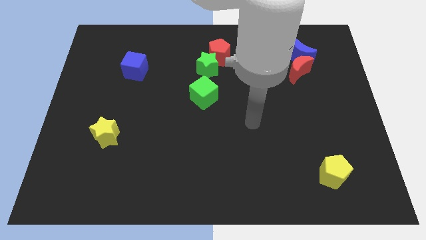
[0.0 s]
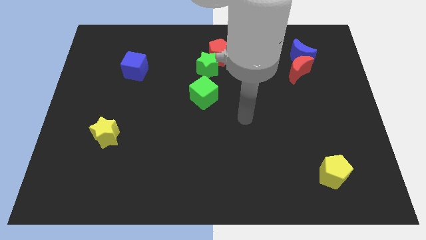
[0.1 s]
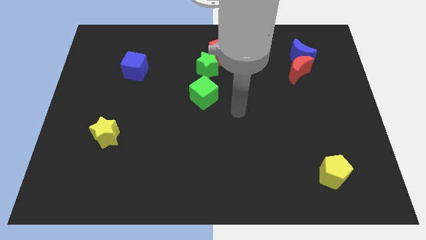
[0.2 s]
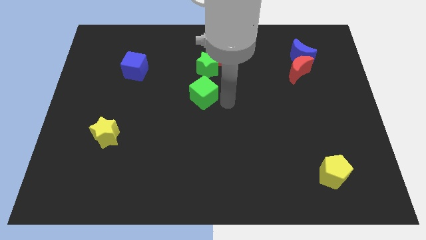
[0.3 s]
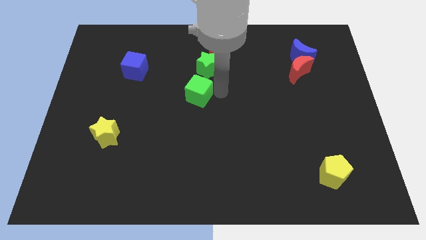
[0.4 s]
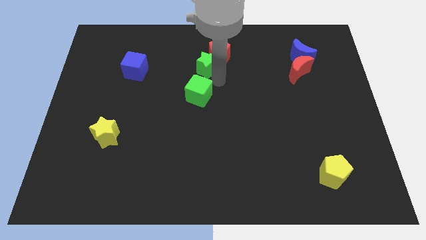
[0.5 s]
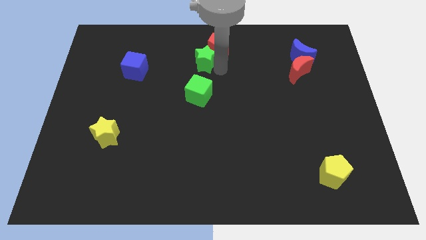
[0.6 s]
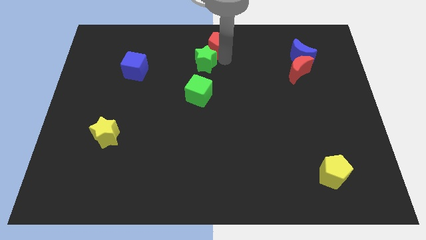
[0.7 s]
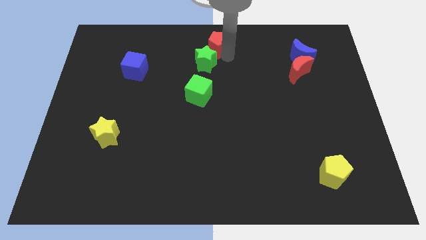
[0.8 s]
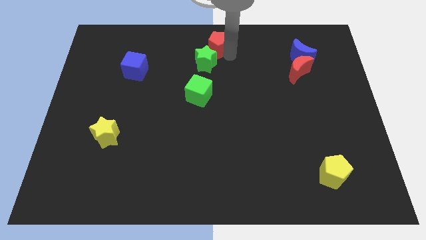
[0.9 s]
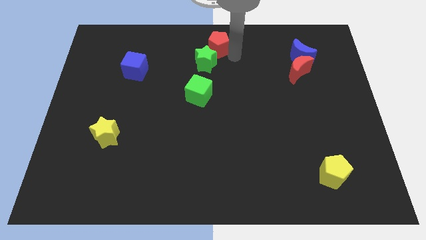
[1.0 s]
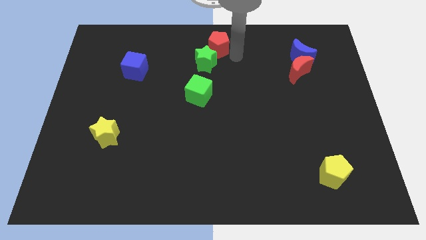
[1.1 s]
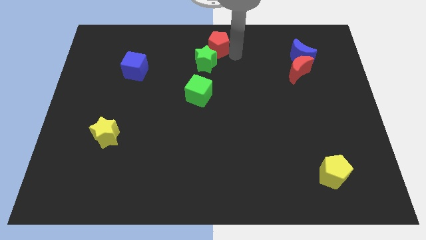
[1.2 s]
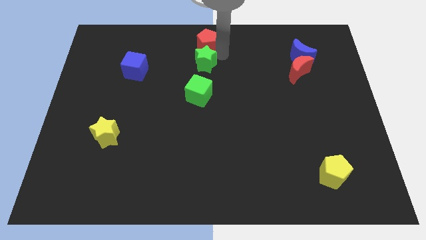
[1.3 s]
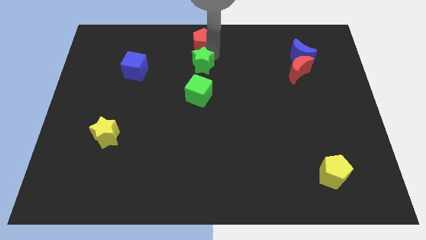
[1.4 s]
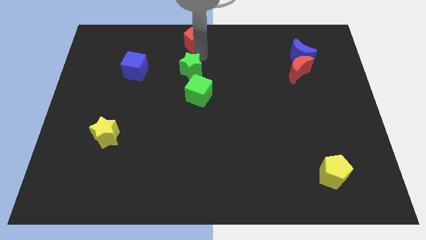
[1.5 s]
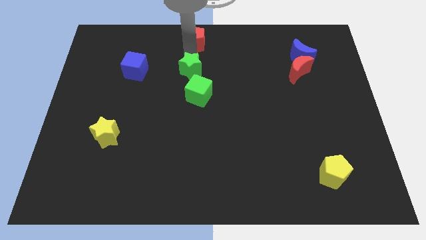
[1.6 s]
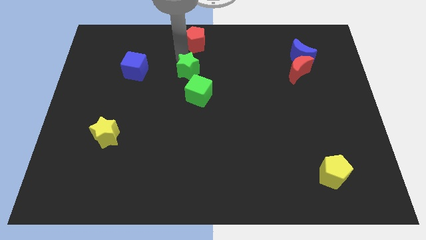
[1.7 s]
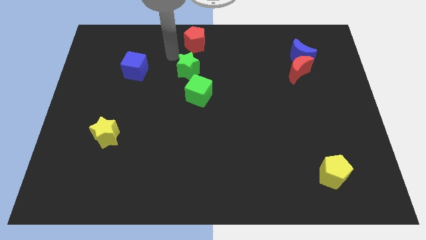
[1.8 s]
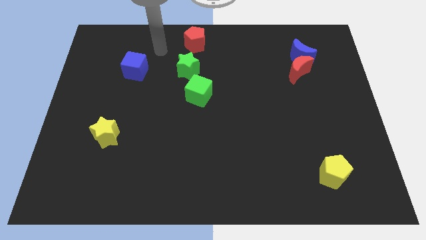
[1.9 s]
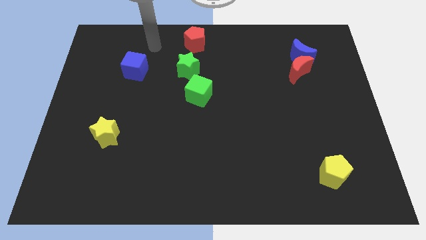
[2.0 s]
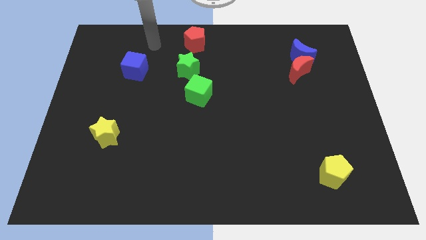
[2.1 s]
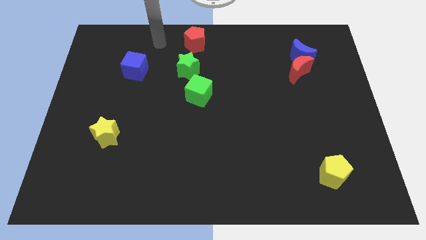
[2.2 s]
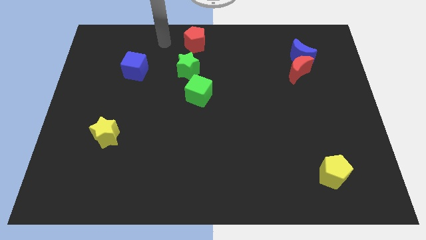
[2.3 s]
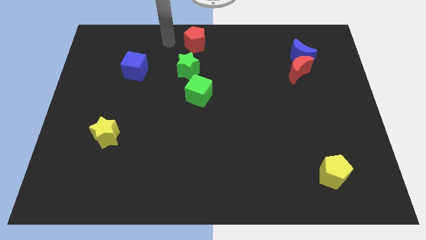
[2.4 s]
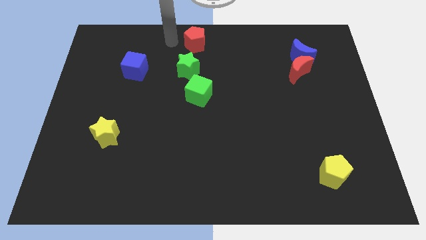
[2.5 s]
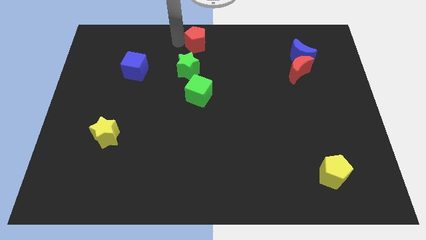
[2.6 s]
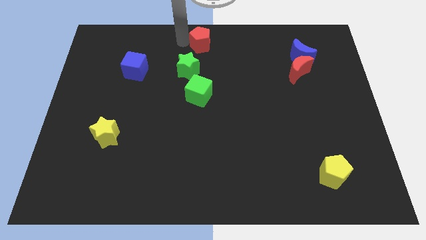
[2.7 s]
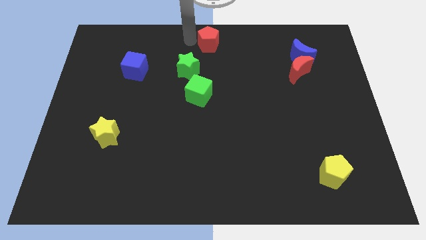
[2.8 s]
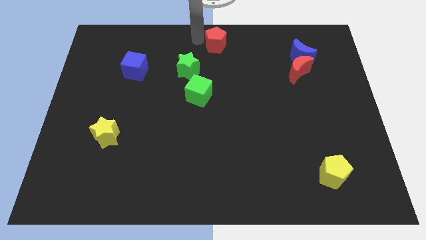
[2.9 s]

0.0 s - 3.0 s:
move the green blocks away from the red pentagon

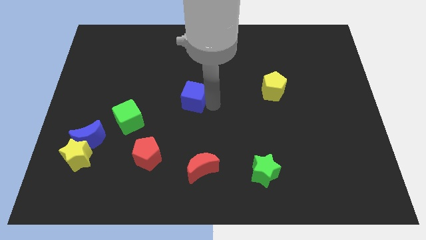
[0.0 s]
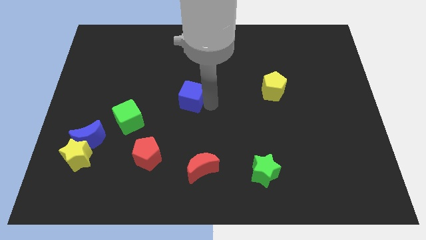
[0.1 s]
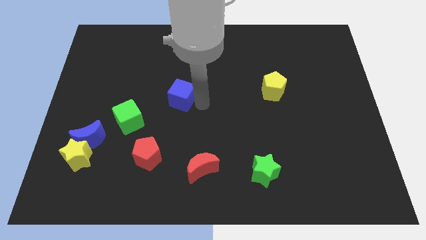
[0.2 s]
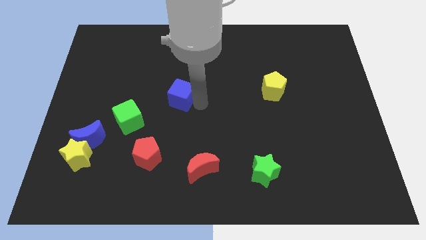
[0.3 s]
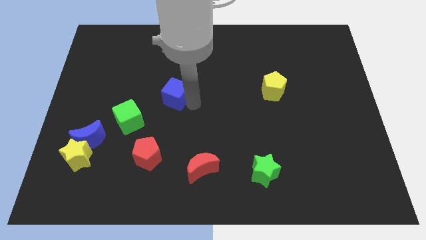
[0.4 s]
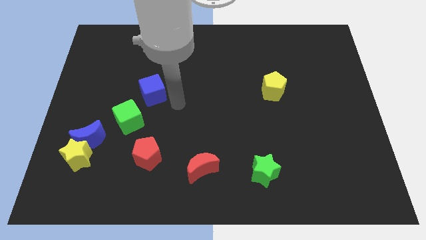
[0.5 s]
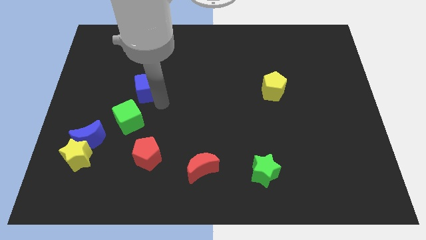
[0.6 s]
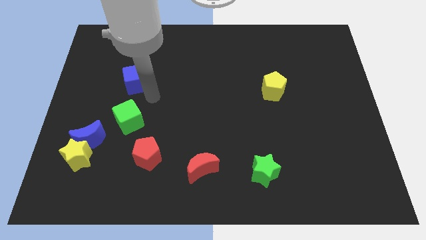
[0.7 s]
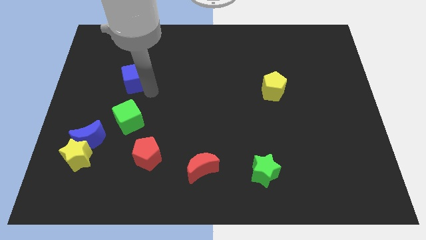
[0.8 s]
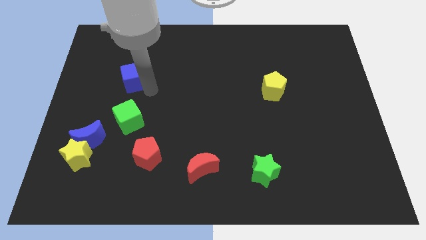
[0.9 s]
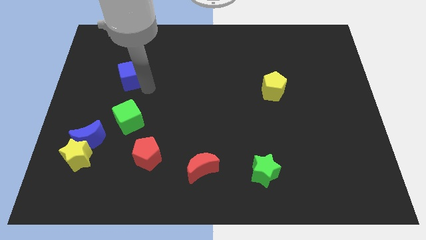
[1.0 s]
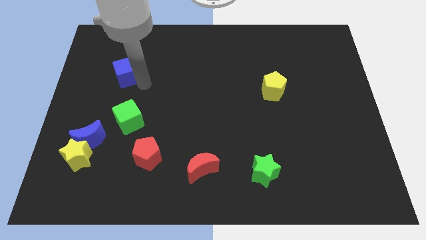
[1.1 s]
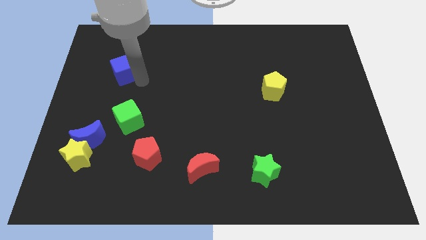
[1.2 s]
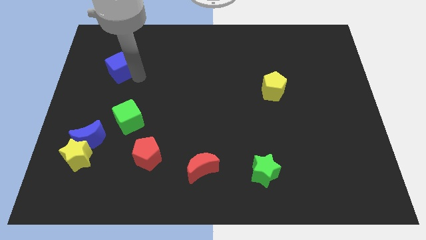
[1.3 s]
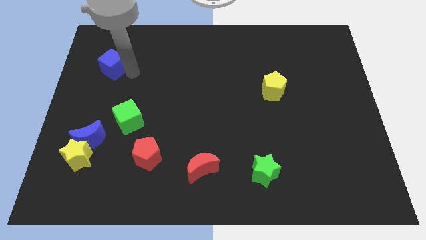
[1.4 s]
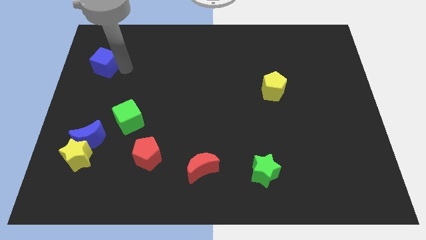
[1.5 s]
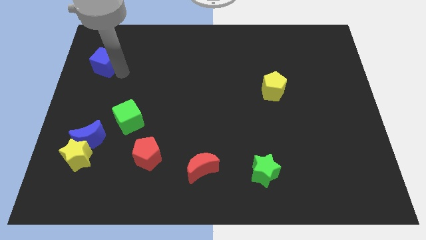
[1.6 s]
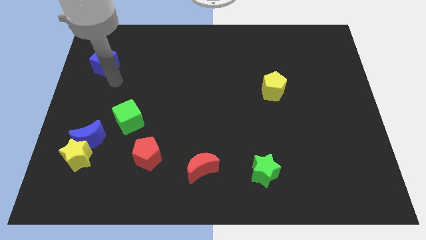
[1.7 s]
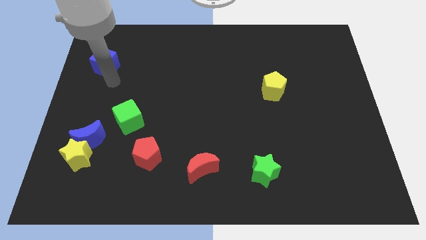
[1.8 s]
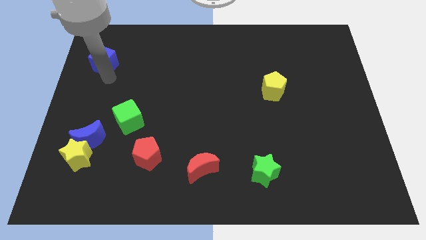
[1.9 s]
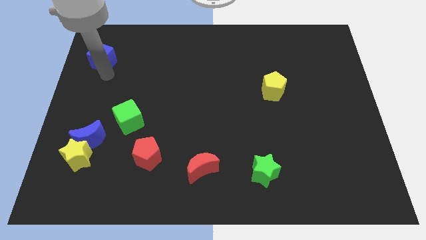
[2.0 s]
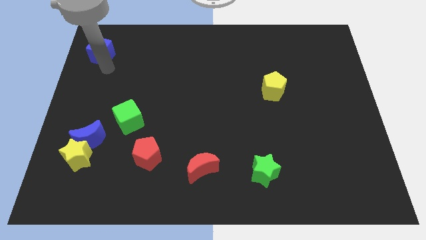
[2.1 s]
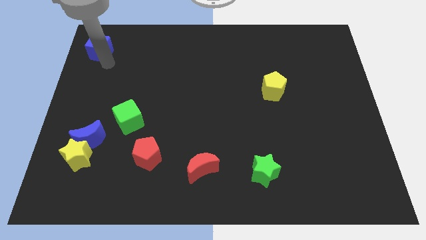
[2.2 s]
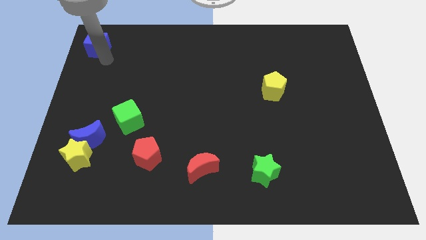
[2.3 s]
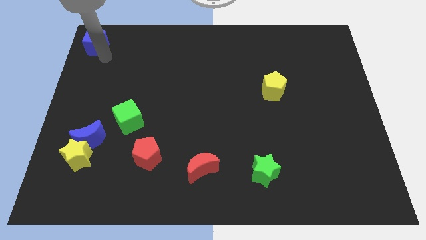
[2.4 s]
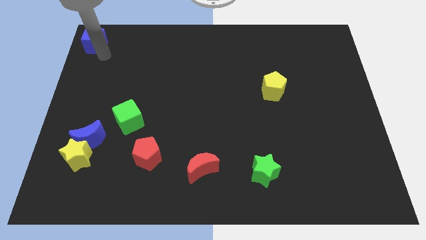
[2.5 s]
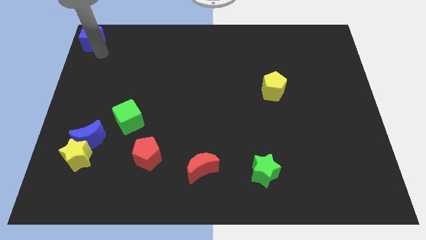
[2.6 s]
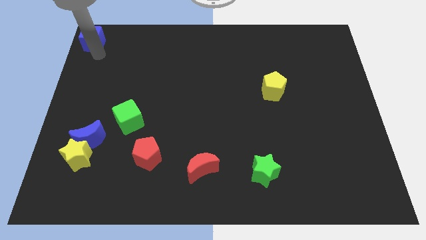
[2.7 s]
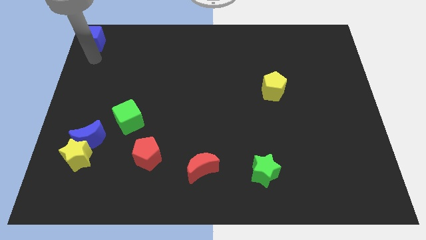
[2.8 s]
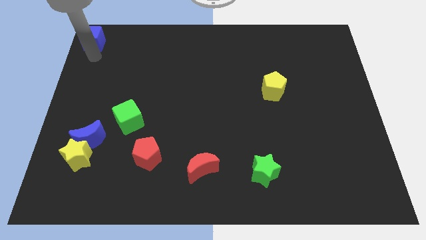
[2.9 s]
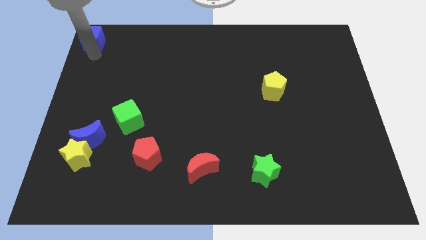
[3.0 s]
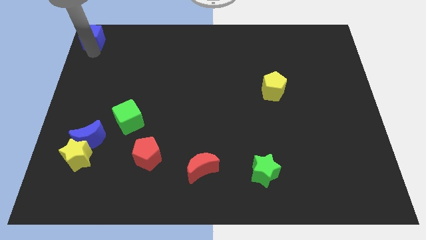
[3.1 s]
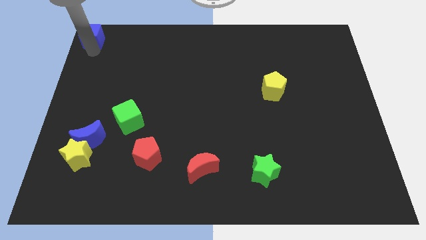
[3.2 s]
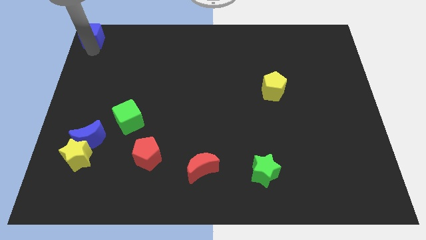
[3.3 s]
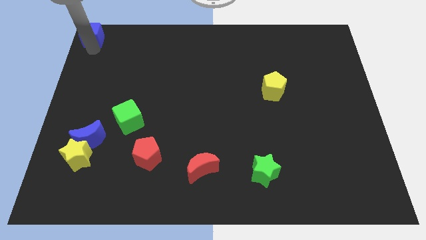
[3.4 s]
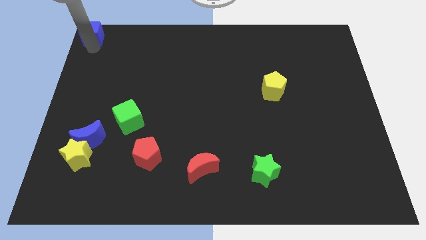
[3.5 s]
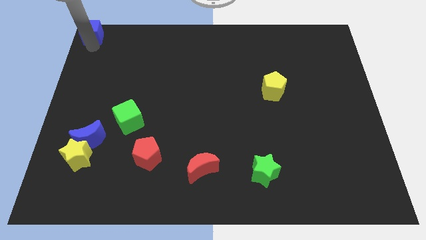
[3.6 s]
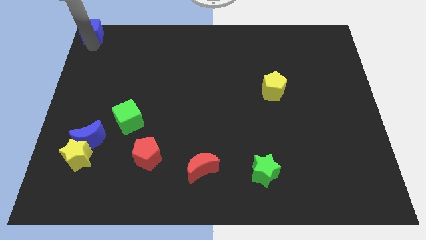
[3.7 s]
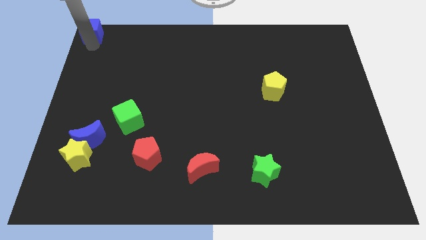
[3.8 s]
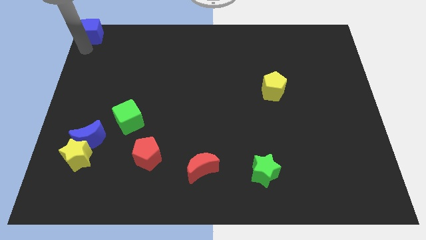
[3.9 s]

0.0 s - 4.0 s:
push the blue cube to the top left of the table

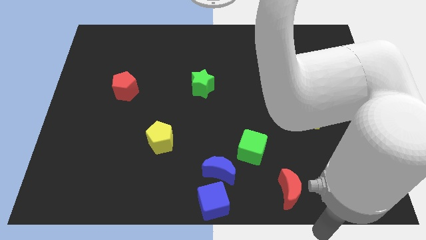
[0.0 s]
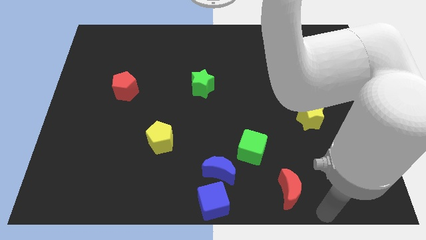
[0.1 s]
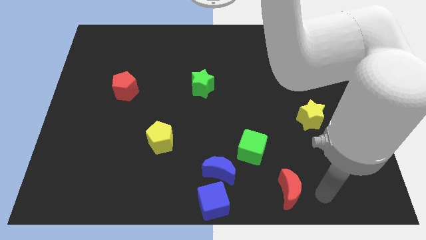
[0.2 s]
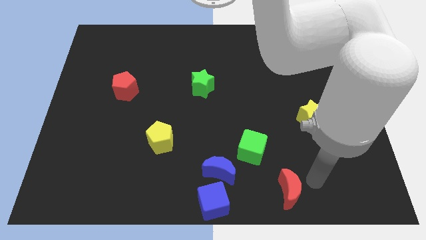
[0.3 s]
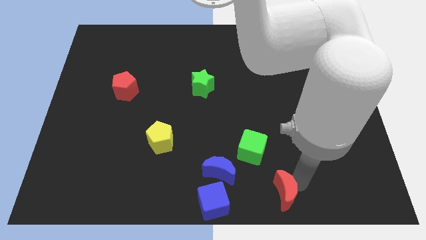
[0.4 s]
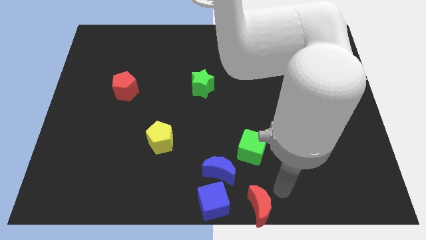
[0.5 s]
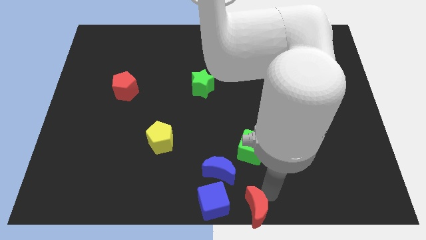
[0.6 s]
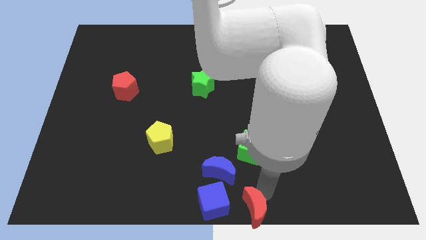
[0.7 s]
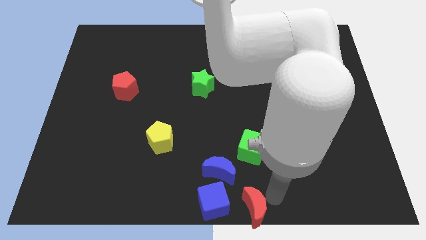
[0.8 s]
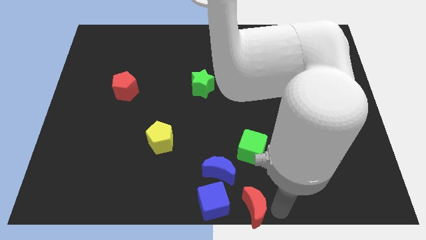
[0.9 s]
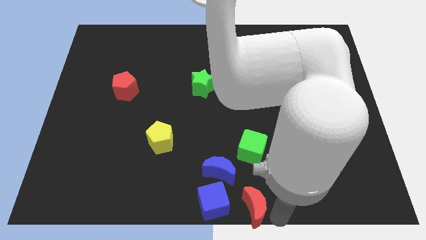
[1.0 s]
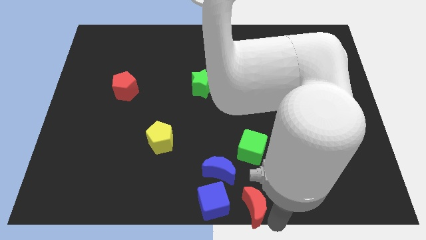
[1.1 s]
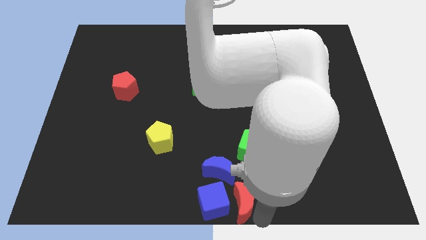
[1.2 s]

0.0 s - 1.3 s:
place red moon to bottom center

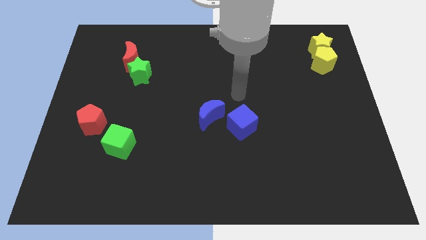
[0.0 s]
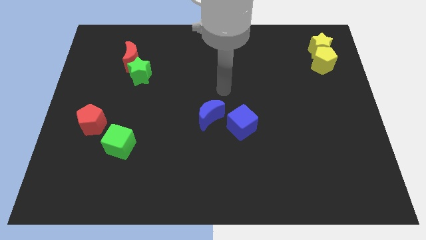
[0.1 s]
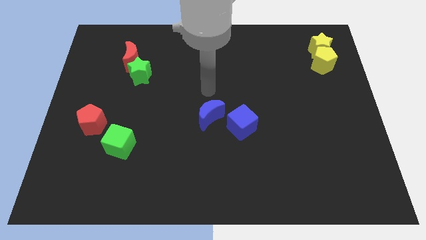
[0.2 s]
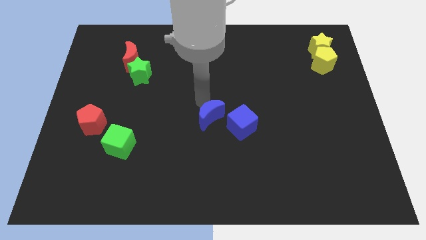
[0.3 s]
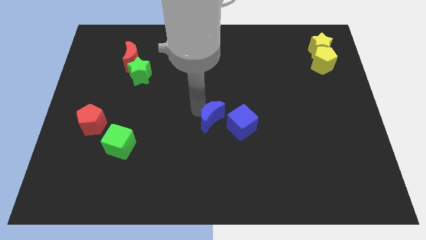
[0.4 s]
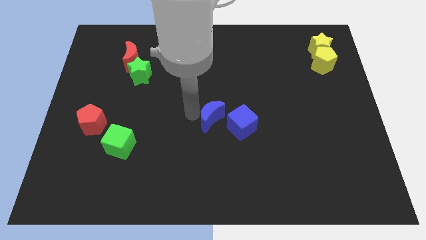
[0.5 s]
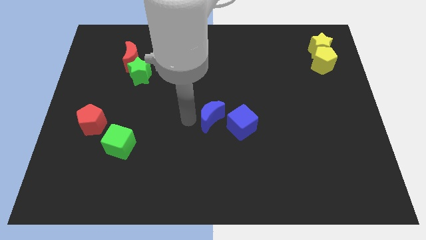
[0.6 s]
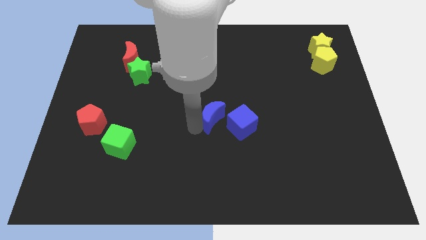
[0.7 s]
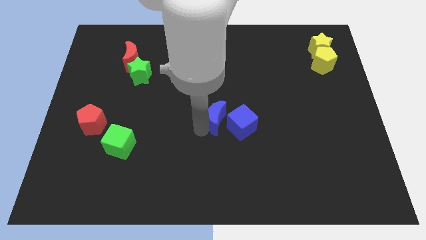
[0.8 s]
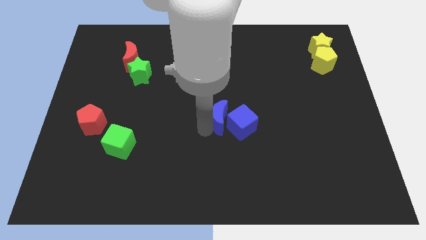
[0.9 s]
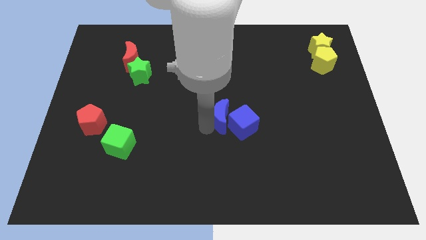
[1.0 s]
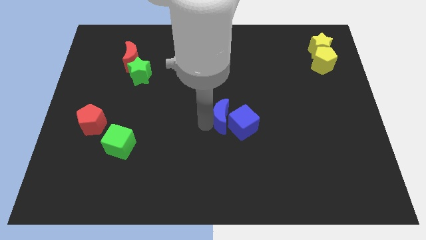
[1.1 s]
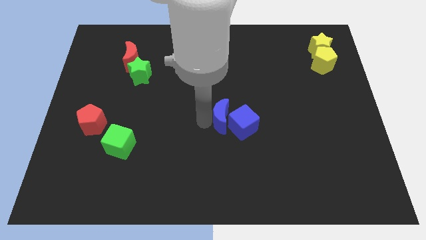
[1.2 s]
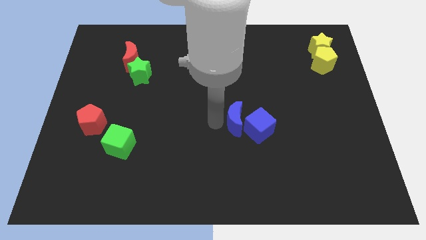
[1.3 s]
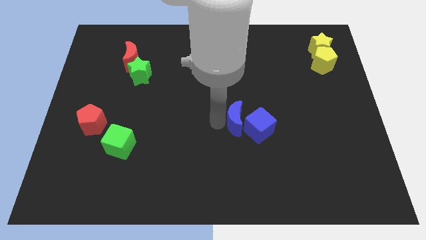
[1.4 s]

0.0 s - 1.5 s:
push blue crescent into the blue cube
